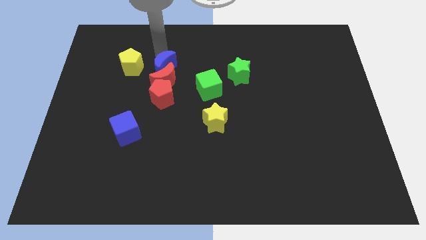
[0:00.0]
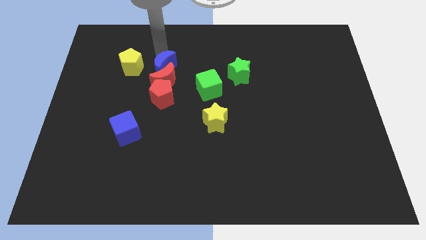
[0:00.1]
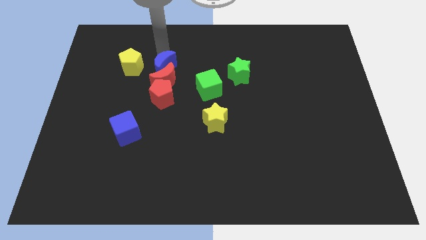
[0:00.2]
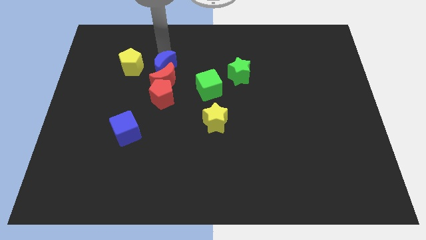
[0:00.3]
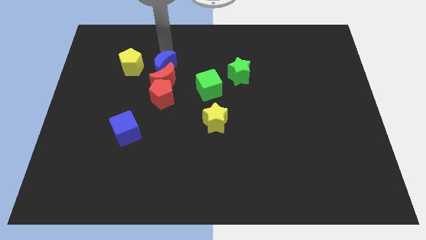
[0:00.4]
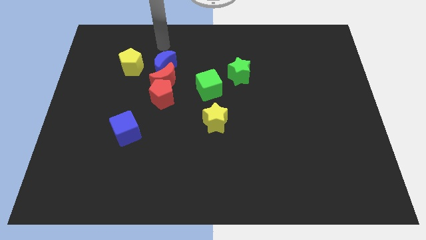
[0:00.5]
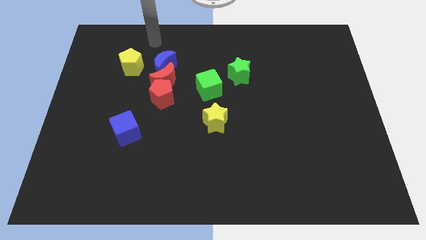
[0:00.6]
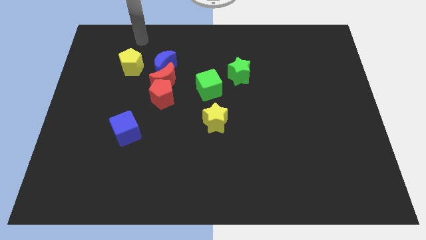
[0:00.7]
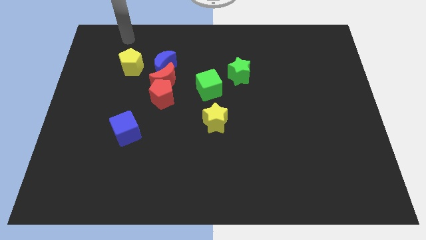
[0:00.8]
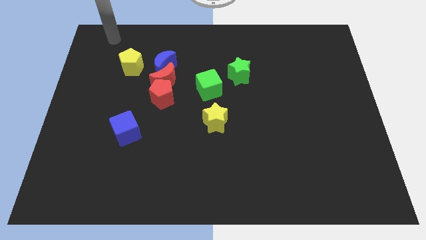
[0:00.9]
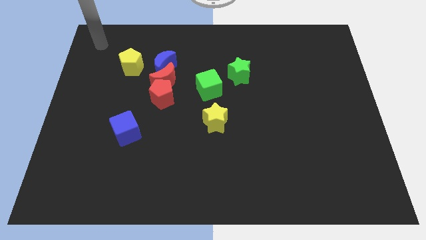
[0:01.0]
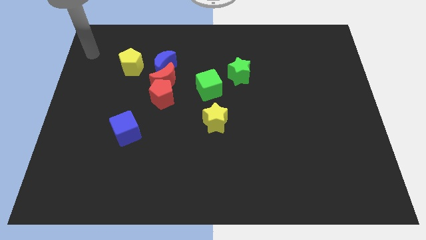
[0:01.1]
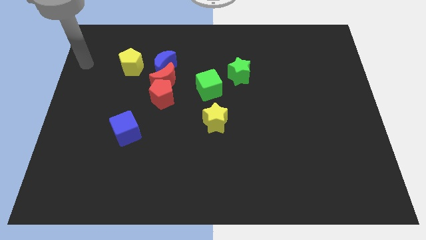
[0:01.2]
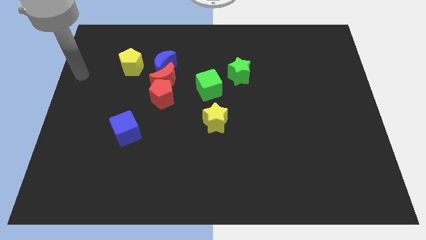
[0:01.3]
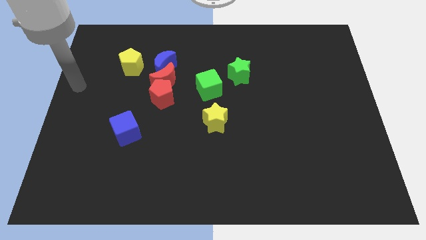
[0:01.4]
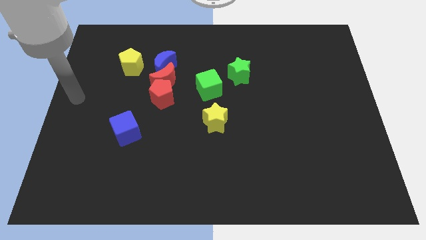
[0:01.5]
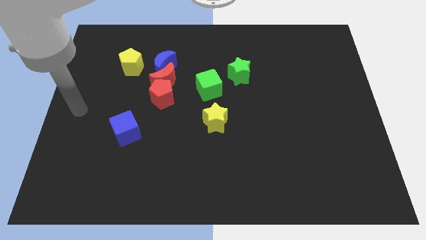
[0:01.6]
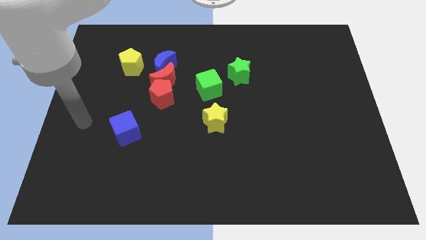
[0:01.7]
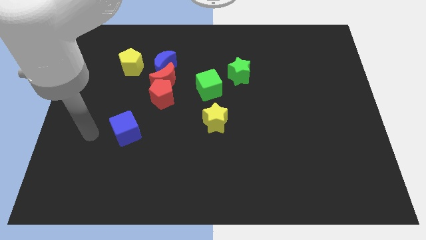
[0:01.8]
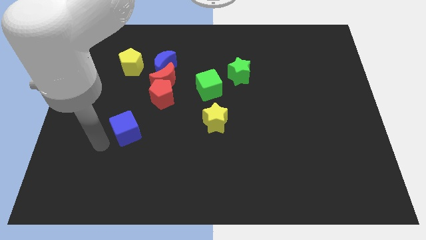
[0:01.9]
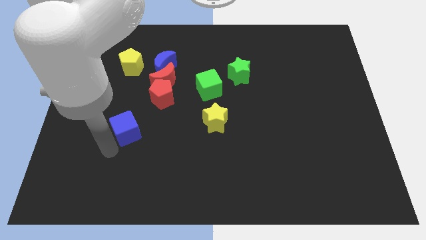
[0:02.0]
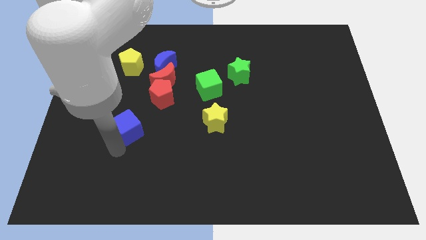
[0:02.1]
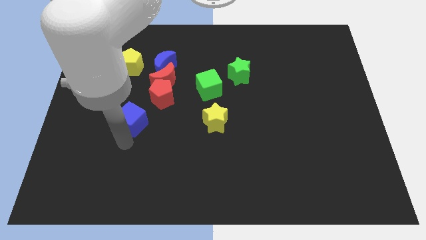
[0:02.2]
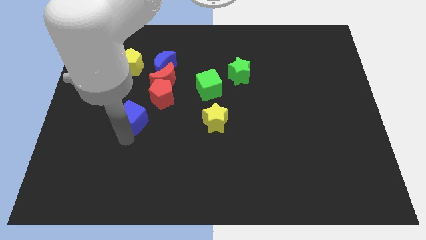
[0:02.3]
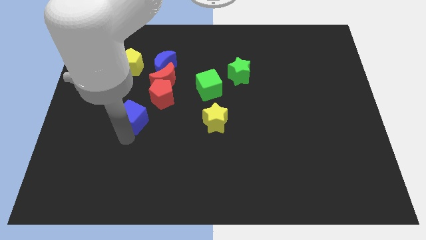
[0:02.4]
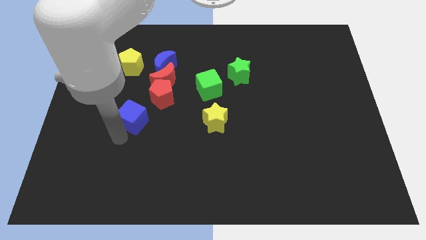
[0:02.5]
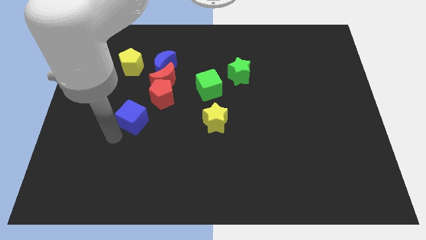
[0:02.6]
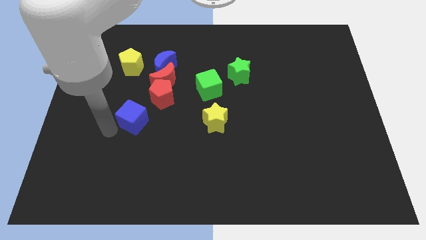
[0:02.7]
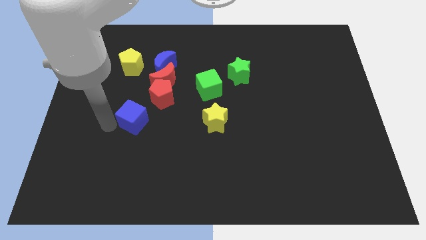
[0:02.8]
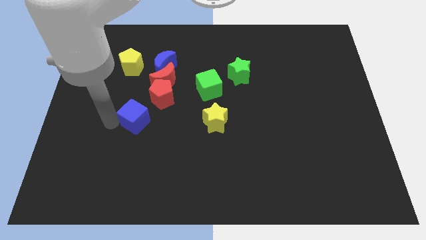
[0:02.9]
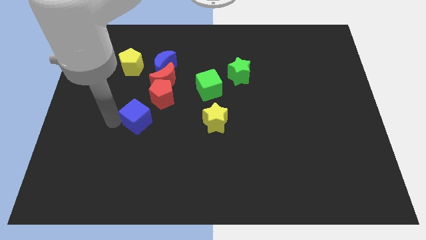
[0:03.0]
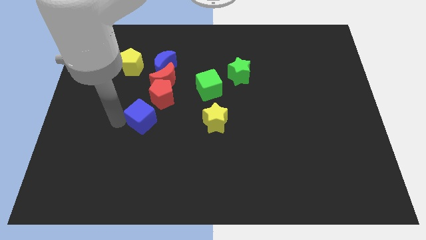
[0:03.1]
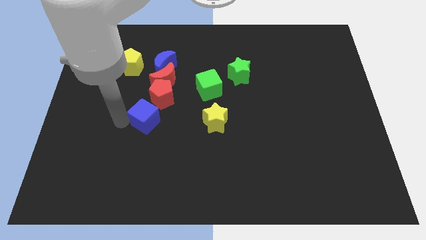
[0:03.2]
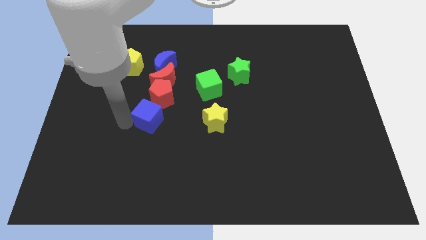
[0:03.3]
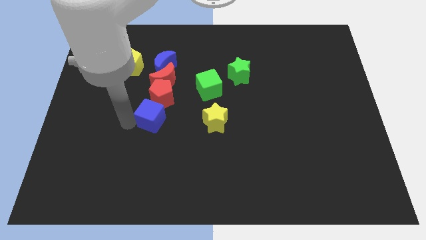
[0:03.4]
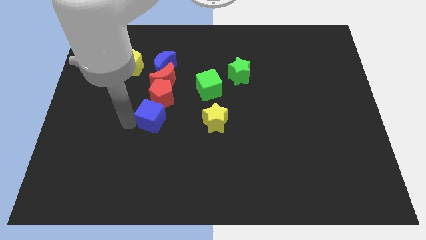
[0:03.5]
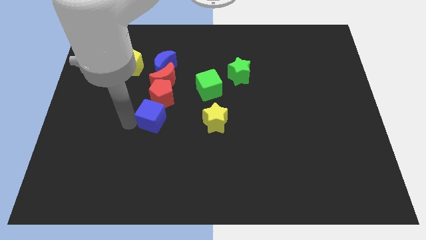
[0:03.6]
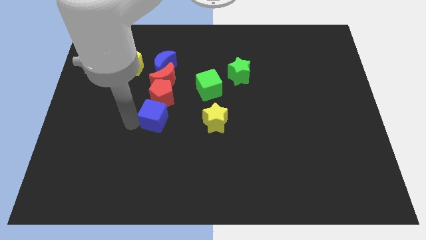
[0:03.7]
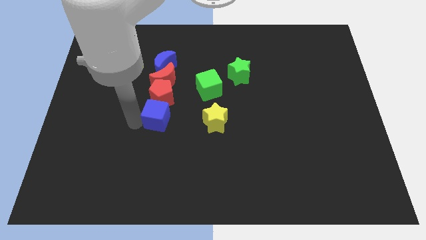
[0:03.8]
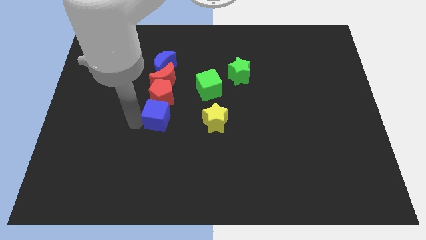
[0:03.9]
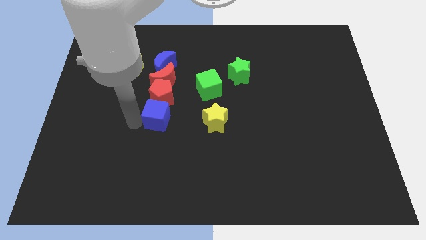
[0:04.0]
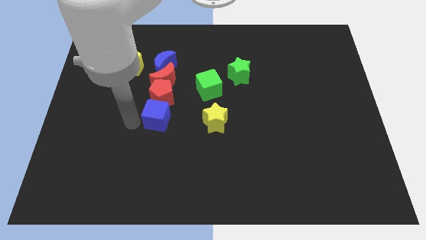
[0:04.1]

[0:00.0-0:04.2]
place the blue cube towards the bottom of red pentagon

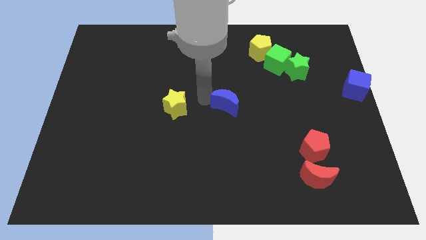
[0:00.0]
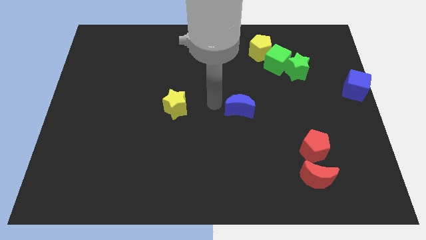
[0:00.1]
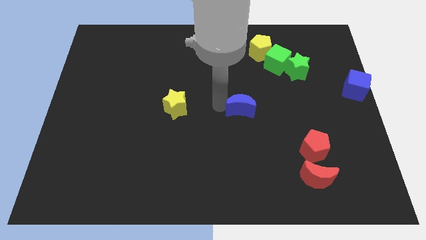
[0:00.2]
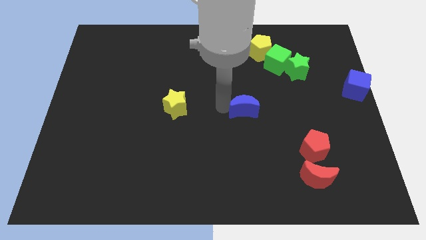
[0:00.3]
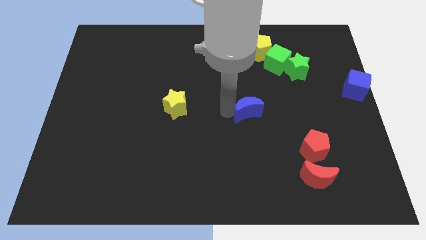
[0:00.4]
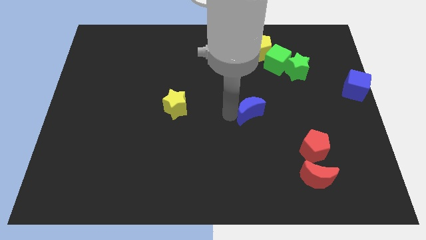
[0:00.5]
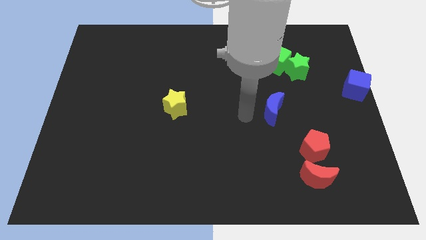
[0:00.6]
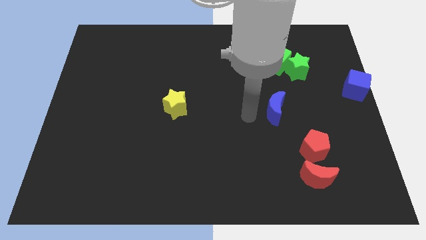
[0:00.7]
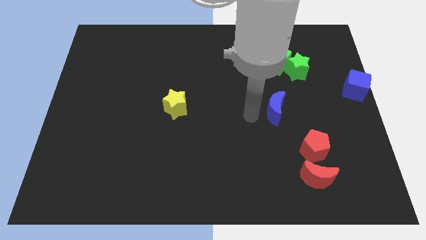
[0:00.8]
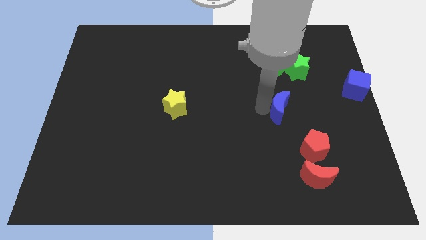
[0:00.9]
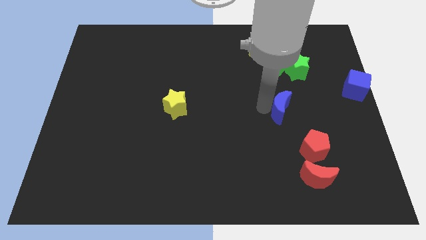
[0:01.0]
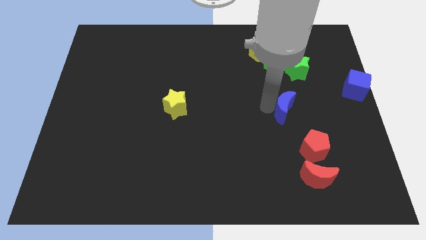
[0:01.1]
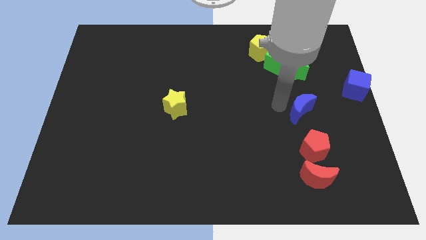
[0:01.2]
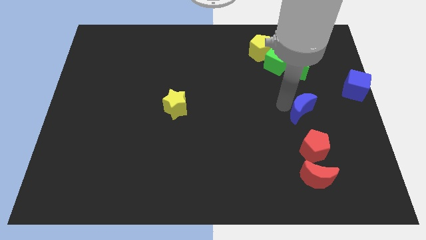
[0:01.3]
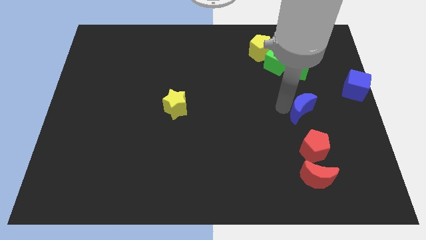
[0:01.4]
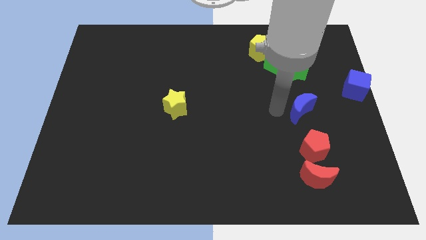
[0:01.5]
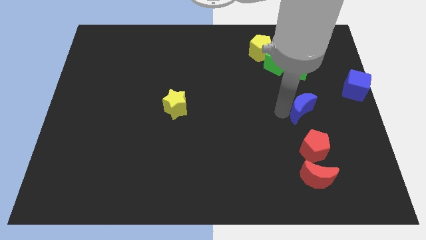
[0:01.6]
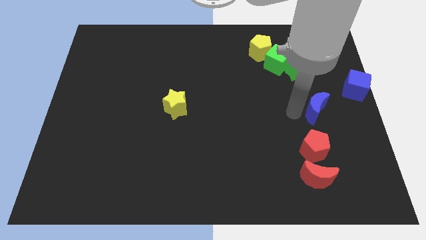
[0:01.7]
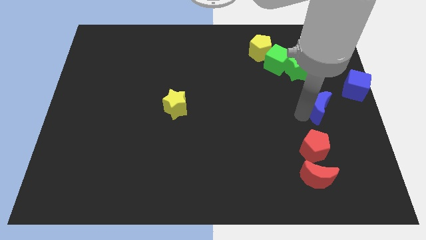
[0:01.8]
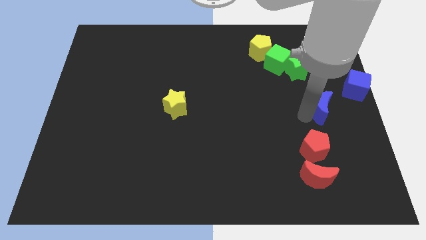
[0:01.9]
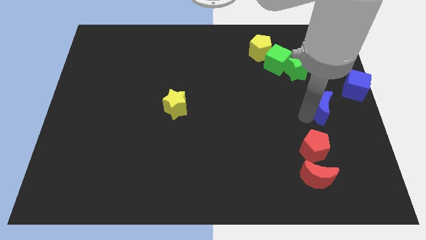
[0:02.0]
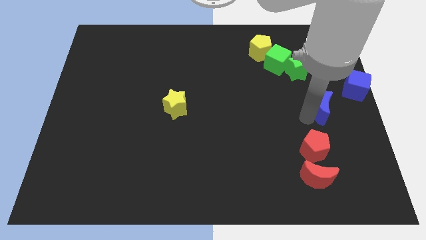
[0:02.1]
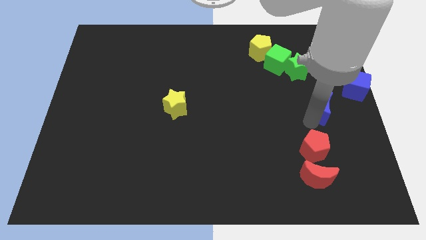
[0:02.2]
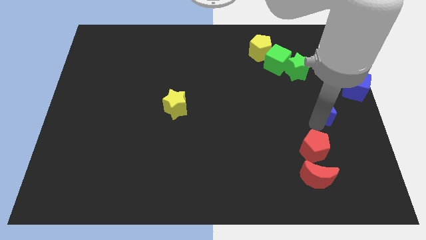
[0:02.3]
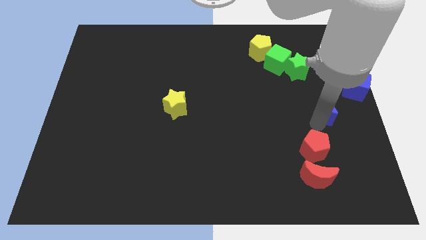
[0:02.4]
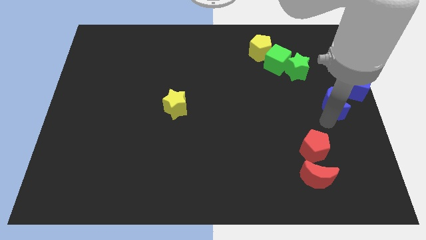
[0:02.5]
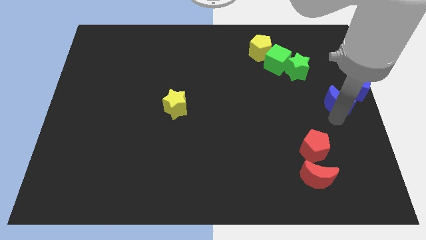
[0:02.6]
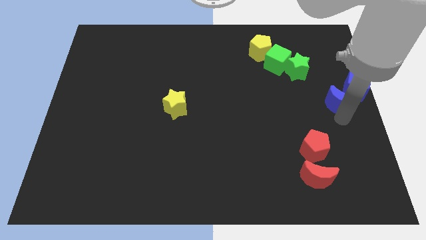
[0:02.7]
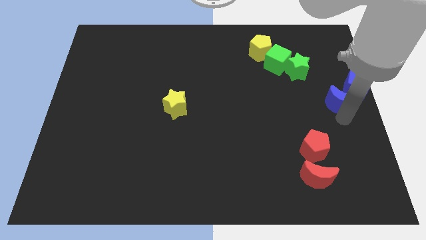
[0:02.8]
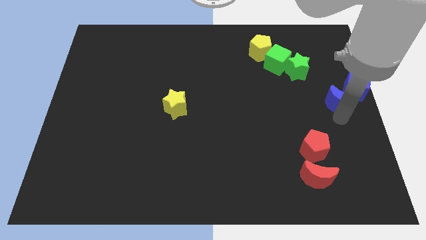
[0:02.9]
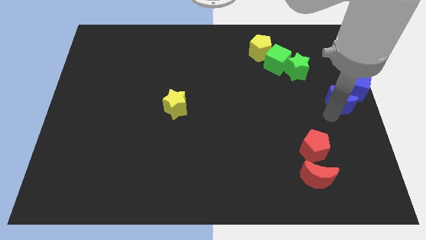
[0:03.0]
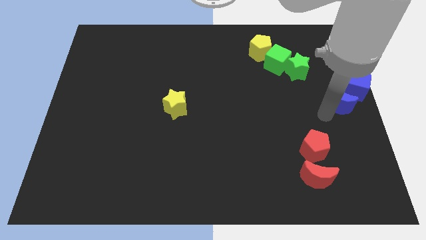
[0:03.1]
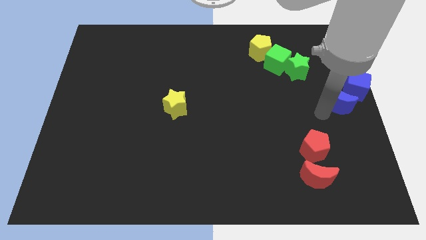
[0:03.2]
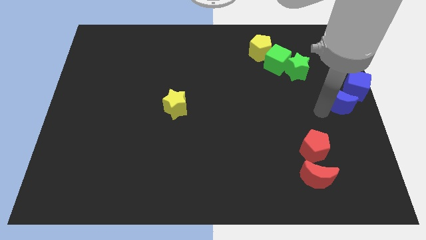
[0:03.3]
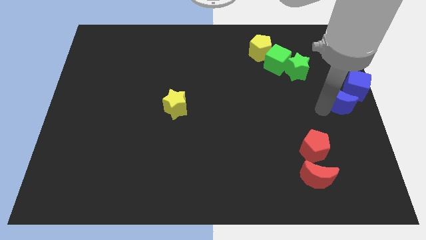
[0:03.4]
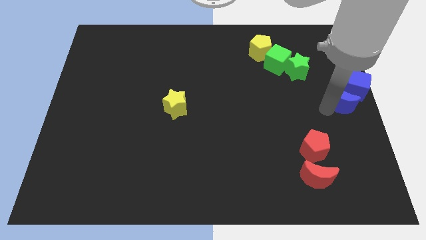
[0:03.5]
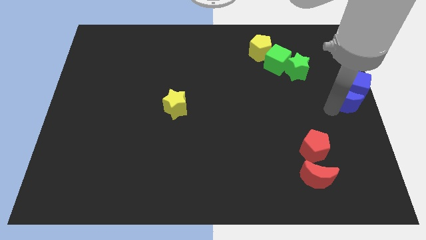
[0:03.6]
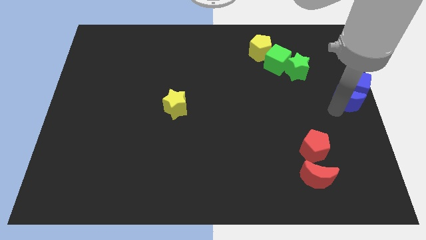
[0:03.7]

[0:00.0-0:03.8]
move the blue crescent to the bottom side of the blue cube

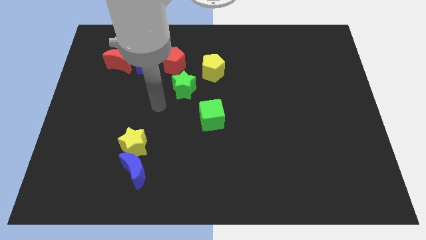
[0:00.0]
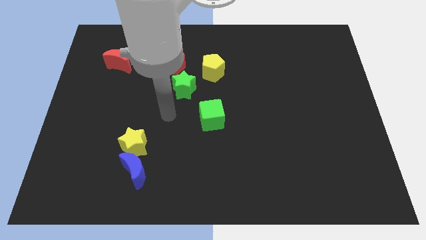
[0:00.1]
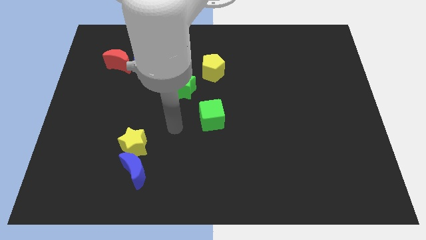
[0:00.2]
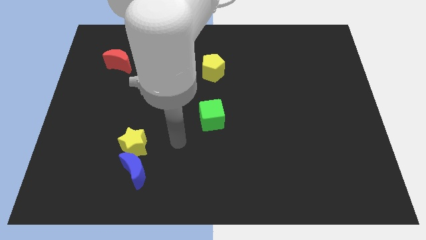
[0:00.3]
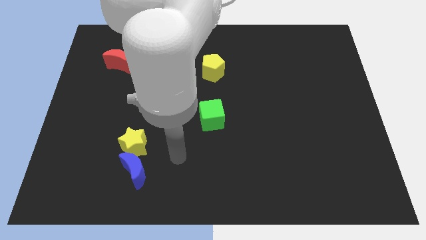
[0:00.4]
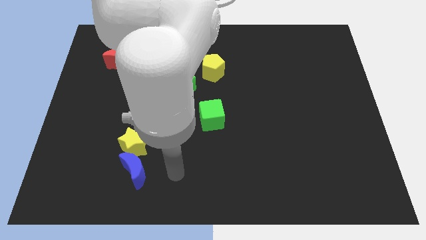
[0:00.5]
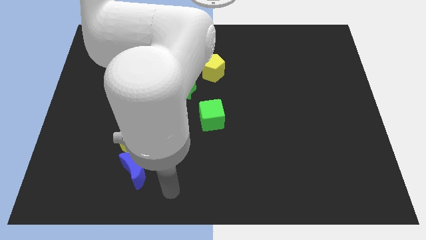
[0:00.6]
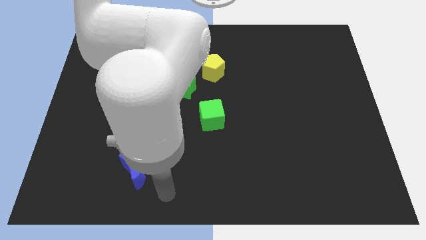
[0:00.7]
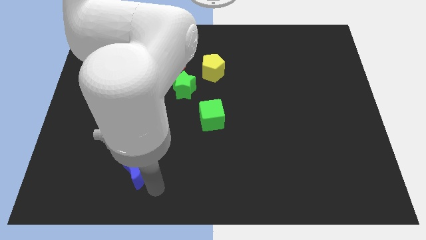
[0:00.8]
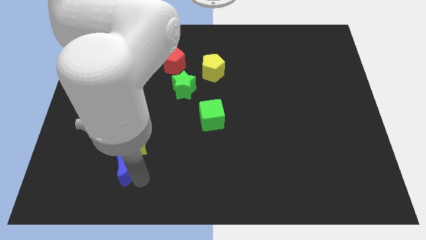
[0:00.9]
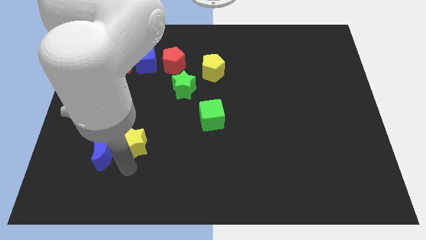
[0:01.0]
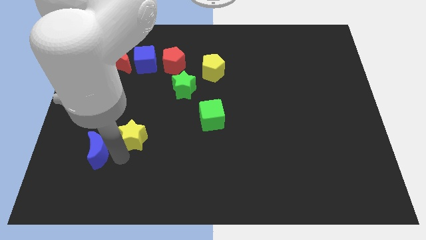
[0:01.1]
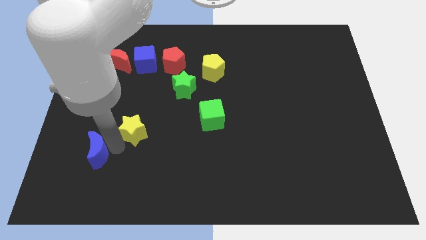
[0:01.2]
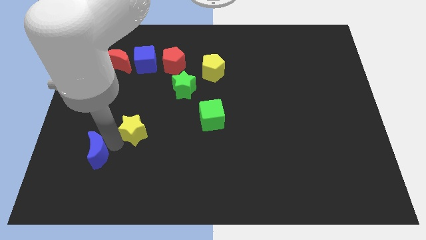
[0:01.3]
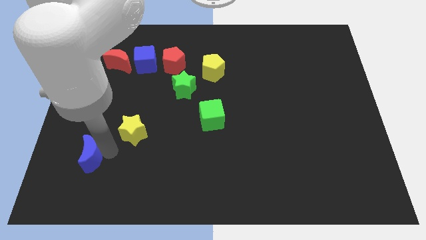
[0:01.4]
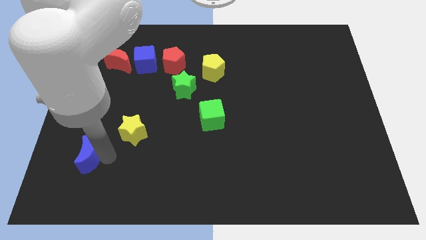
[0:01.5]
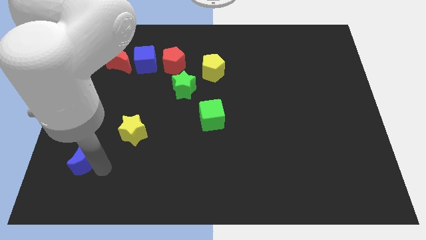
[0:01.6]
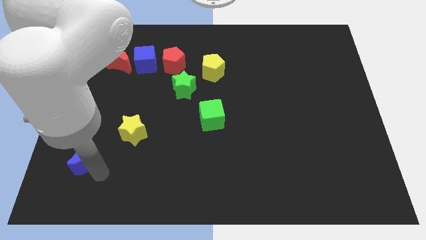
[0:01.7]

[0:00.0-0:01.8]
separate the yellow star and the blue crescent
